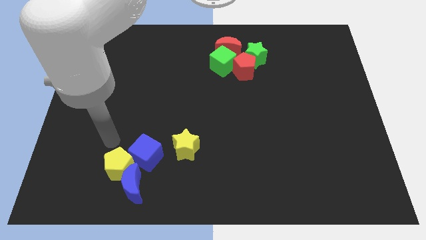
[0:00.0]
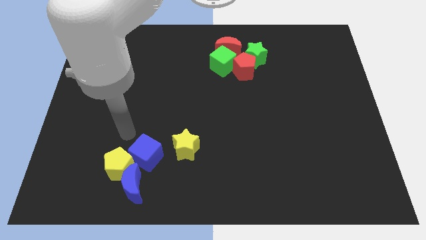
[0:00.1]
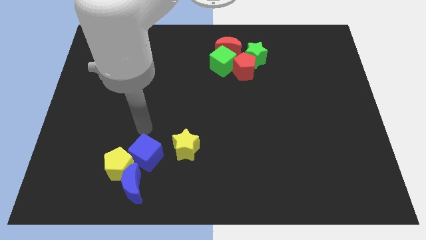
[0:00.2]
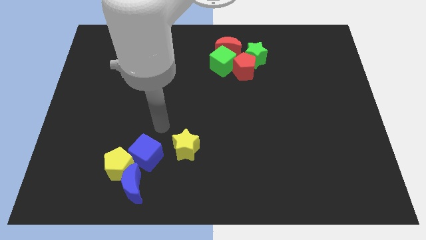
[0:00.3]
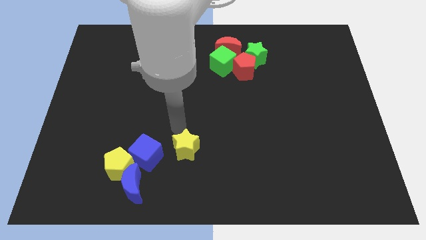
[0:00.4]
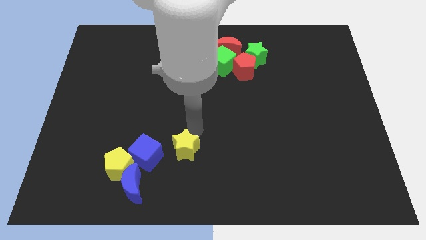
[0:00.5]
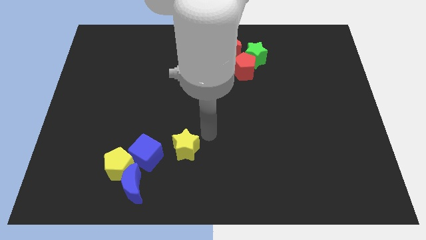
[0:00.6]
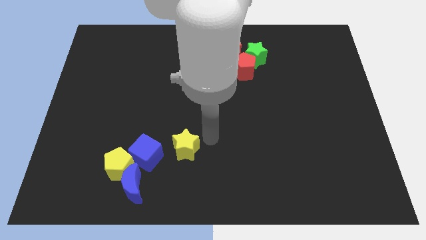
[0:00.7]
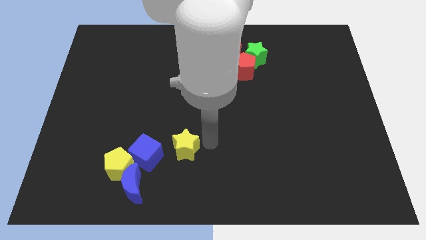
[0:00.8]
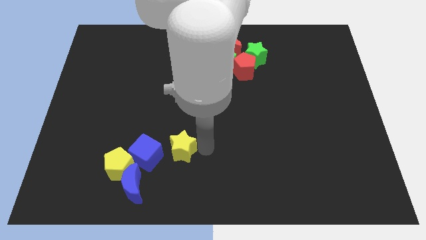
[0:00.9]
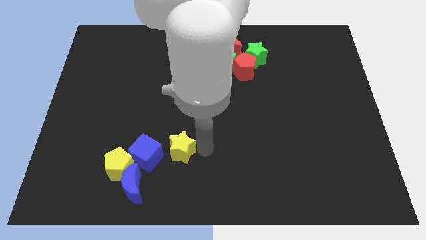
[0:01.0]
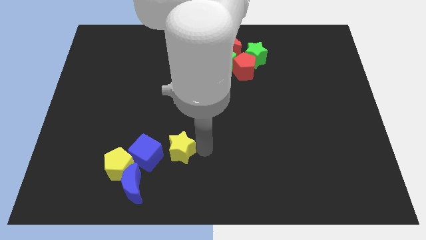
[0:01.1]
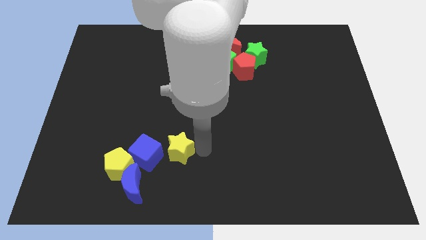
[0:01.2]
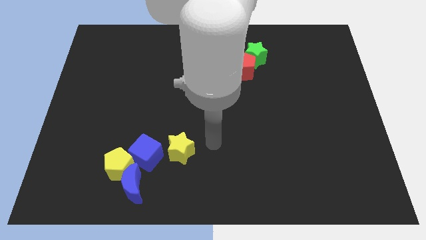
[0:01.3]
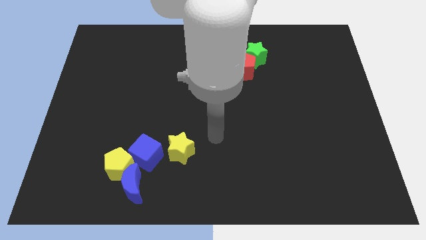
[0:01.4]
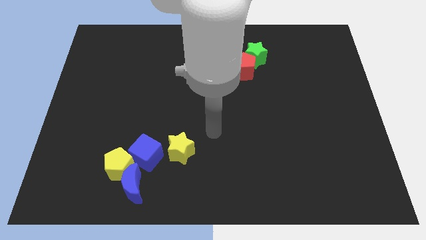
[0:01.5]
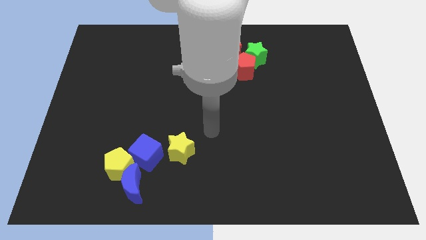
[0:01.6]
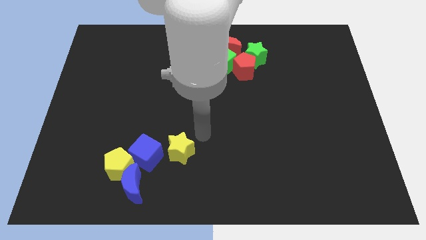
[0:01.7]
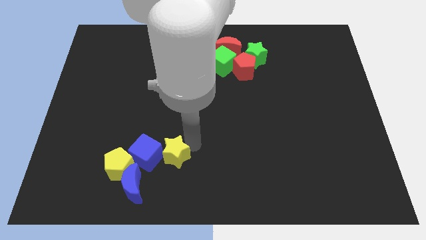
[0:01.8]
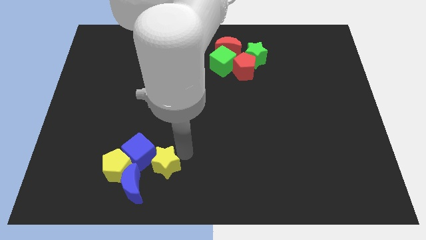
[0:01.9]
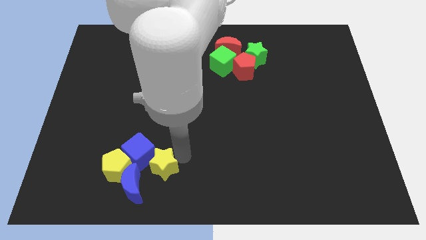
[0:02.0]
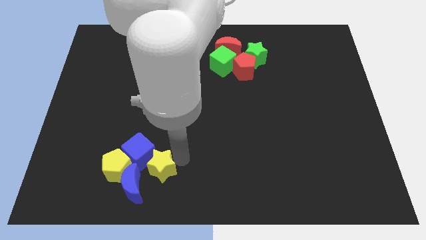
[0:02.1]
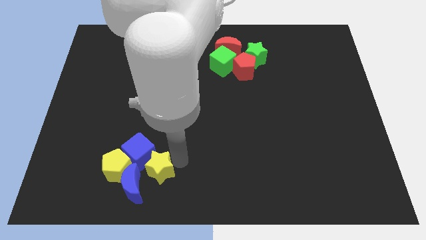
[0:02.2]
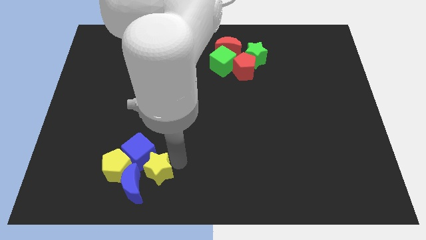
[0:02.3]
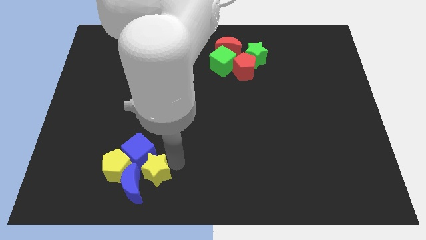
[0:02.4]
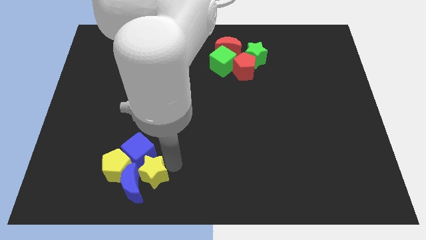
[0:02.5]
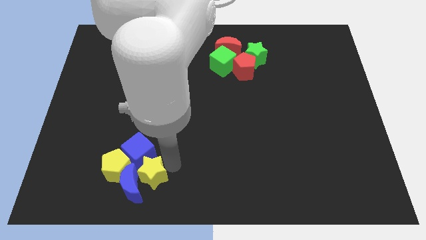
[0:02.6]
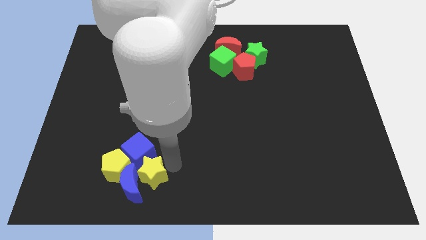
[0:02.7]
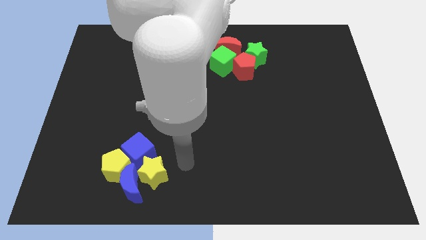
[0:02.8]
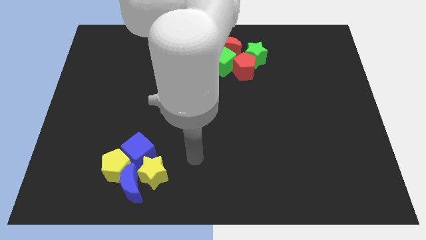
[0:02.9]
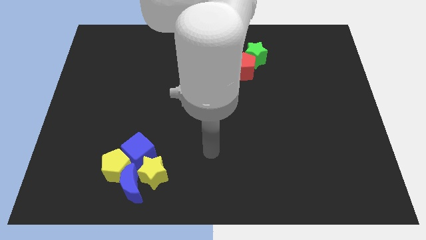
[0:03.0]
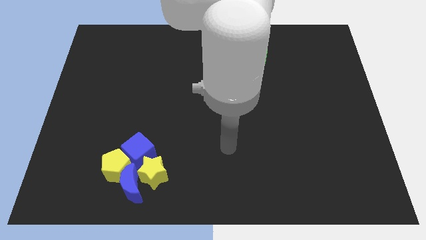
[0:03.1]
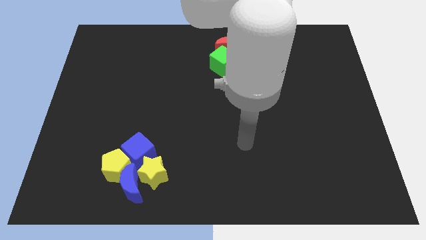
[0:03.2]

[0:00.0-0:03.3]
place the yellow star to the right side of the blue moon

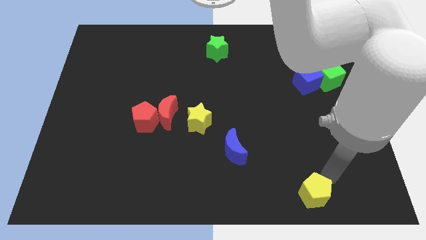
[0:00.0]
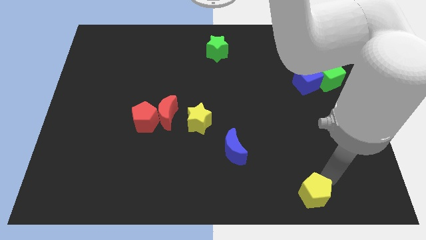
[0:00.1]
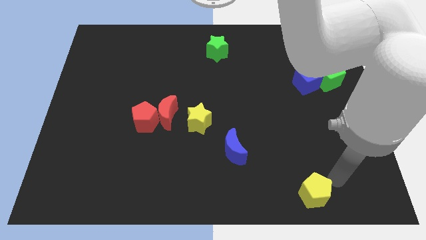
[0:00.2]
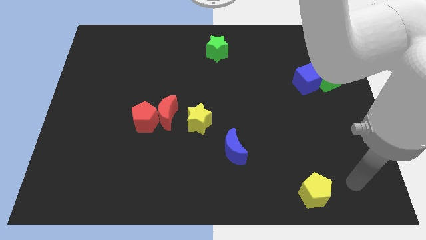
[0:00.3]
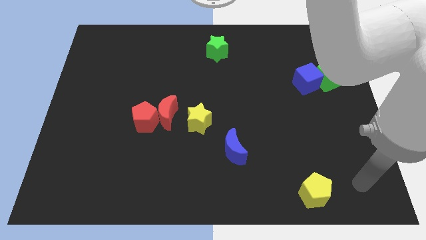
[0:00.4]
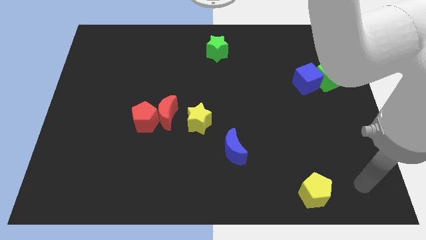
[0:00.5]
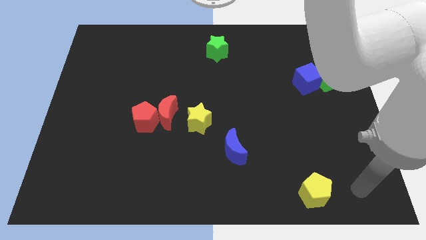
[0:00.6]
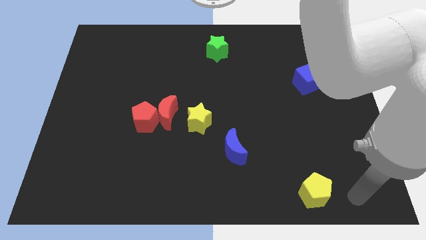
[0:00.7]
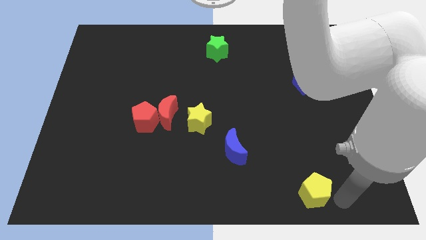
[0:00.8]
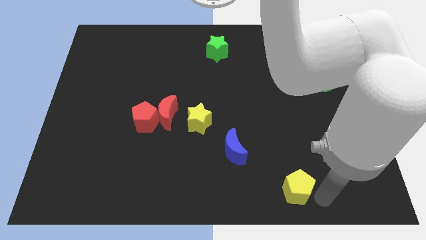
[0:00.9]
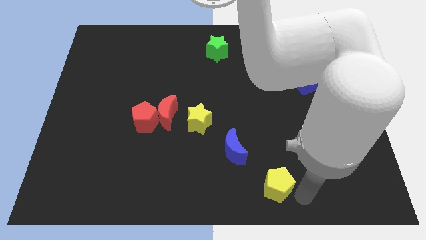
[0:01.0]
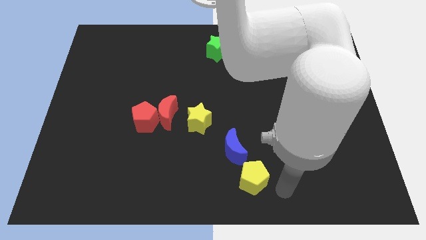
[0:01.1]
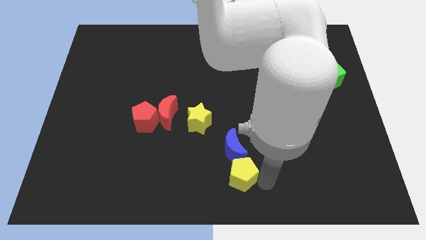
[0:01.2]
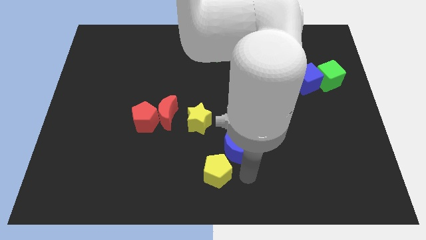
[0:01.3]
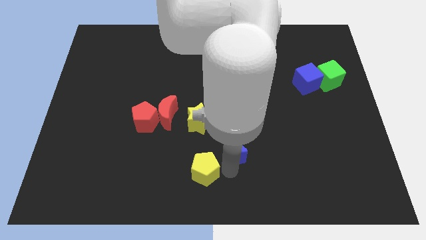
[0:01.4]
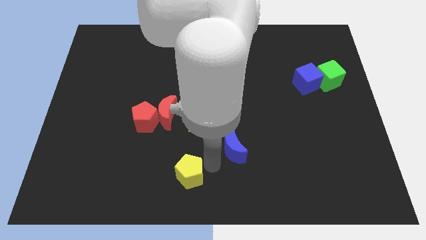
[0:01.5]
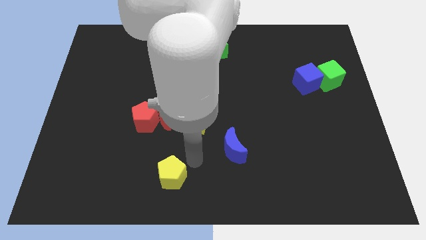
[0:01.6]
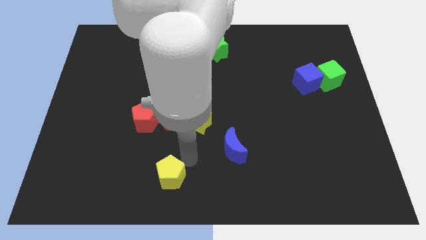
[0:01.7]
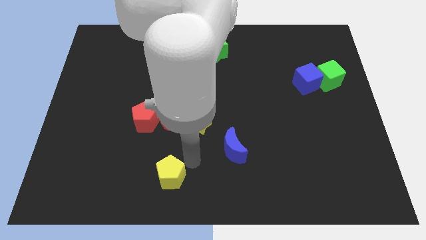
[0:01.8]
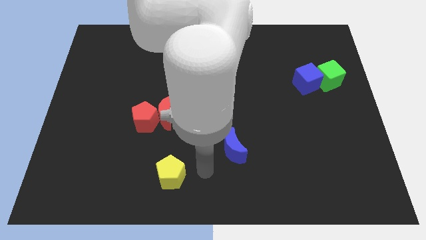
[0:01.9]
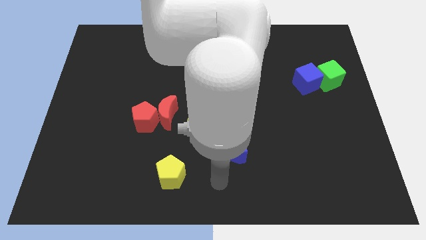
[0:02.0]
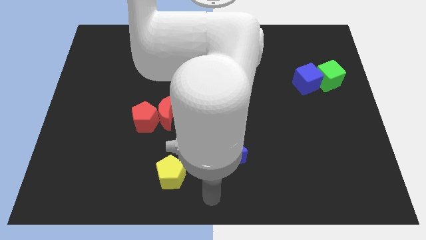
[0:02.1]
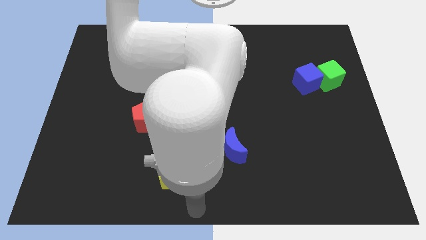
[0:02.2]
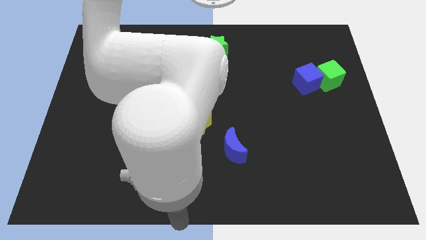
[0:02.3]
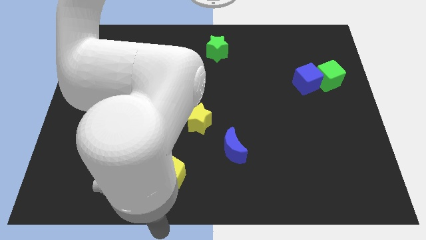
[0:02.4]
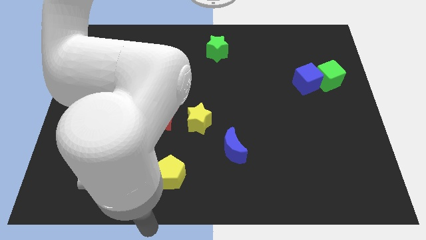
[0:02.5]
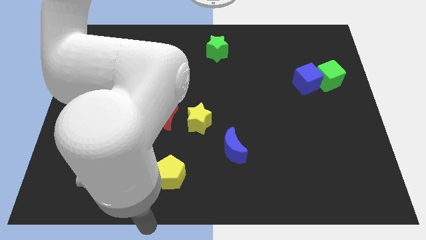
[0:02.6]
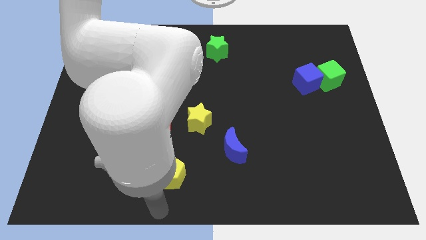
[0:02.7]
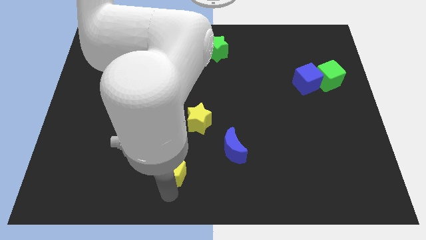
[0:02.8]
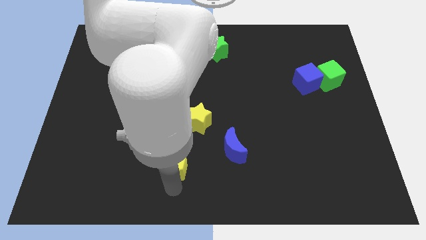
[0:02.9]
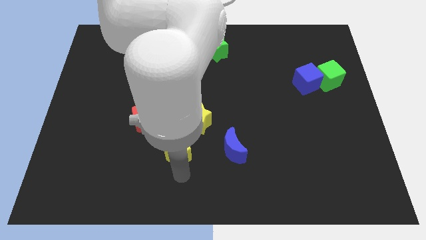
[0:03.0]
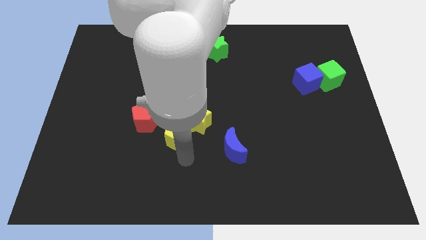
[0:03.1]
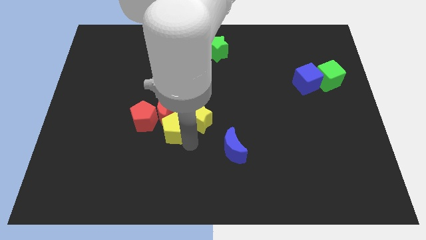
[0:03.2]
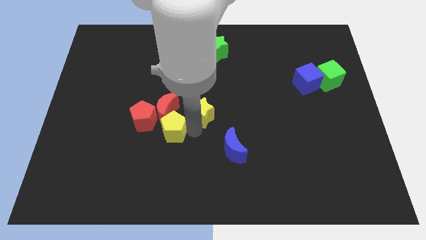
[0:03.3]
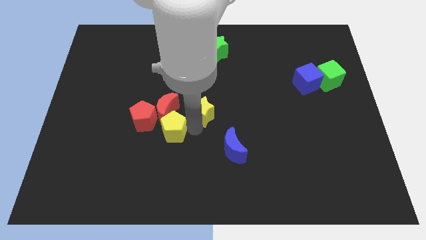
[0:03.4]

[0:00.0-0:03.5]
move the yellow pentagon below the red blocks

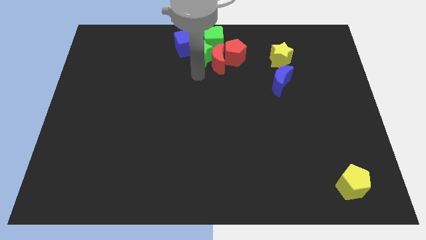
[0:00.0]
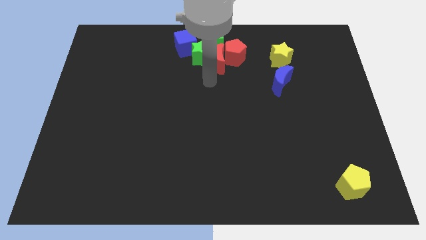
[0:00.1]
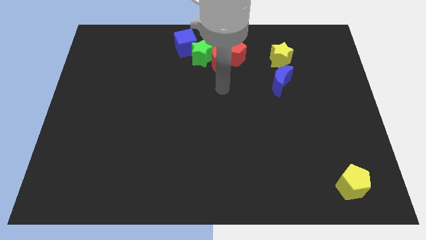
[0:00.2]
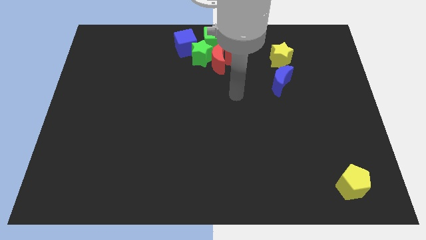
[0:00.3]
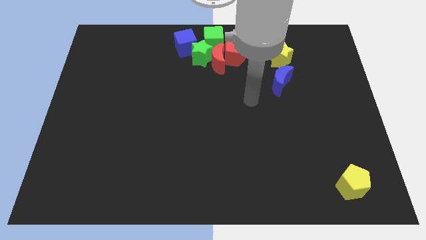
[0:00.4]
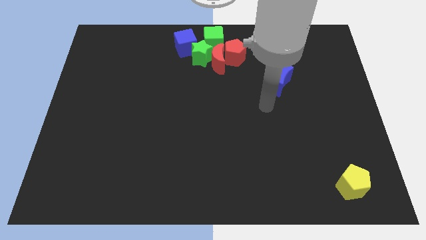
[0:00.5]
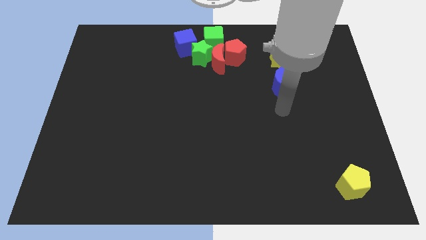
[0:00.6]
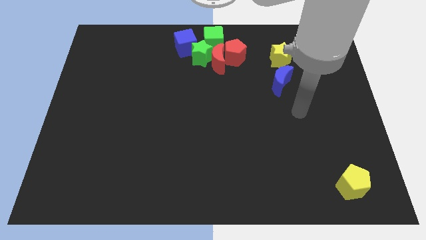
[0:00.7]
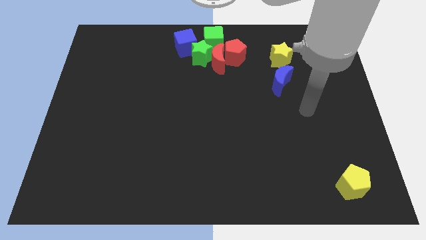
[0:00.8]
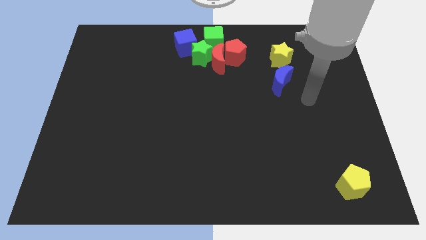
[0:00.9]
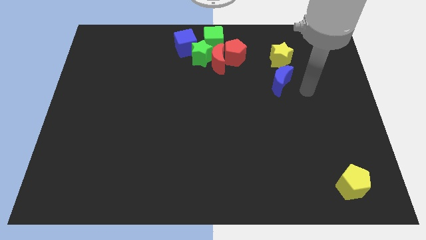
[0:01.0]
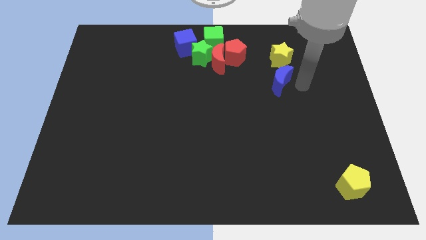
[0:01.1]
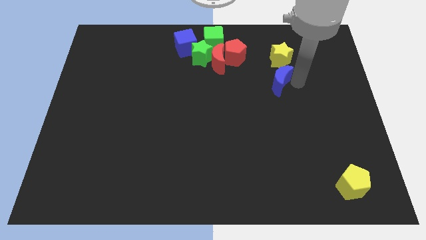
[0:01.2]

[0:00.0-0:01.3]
move your arm towards the right of the blue crescent

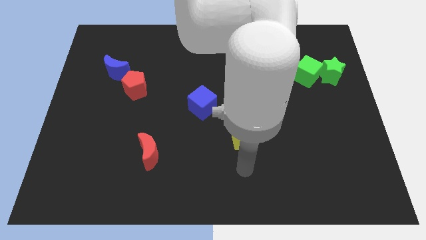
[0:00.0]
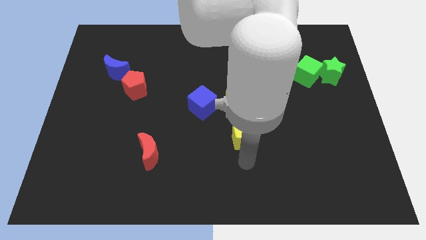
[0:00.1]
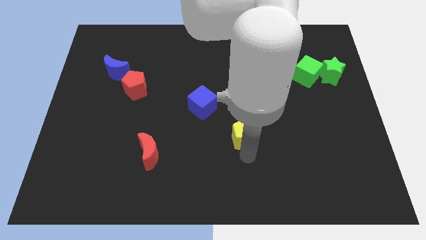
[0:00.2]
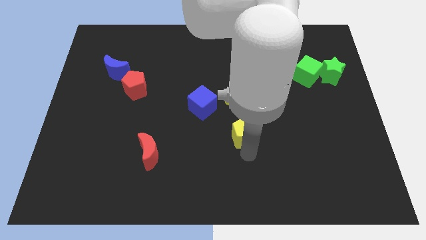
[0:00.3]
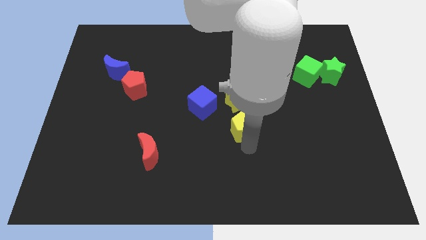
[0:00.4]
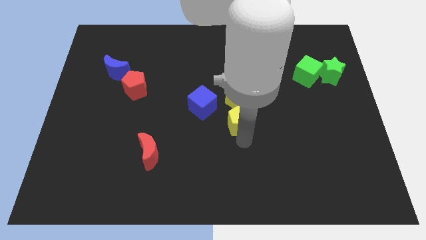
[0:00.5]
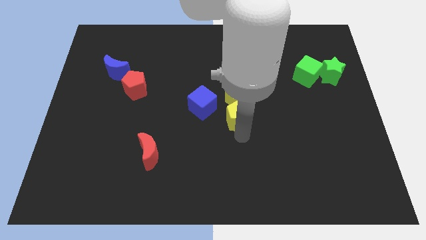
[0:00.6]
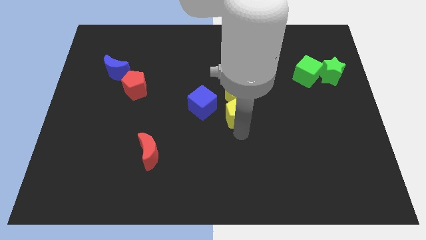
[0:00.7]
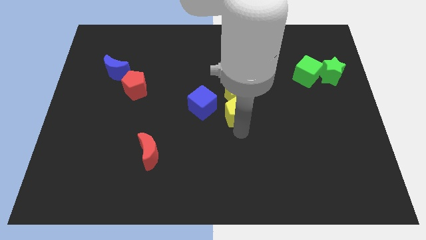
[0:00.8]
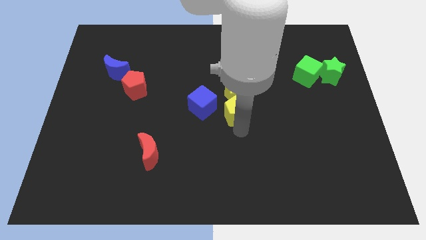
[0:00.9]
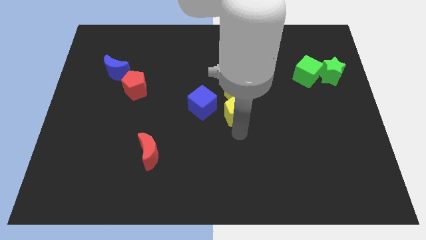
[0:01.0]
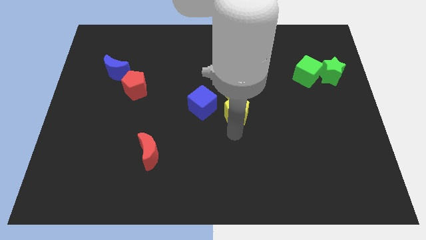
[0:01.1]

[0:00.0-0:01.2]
place the yellow pentagon into the yellow star
